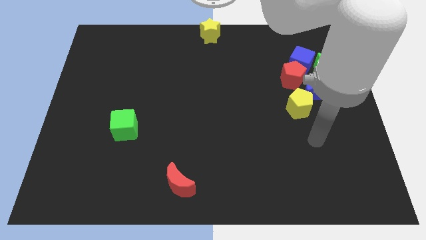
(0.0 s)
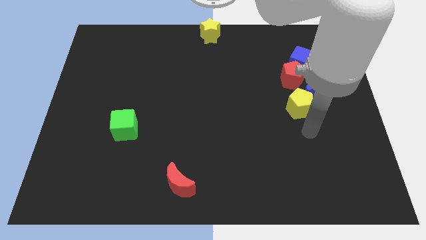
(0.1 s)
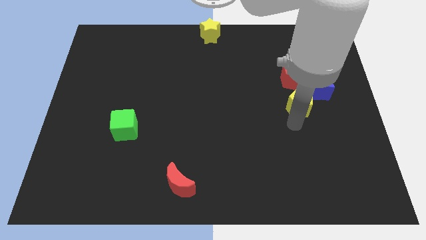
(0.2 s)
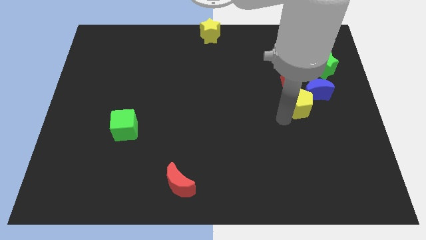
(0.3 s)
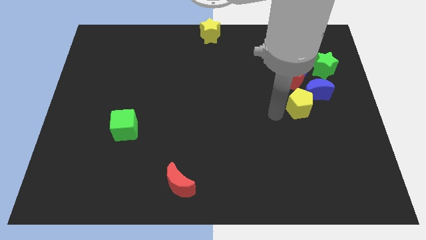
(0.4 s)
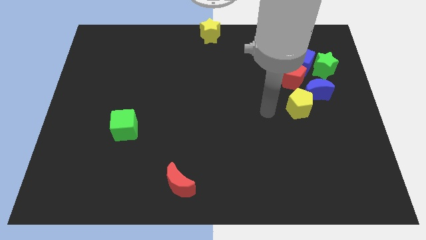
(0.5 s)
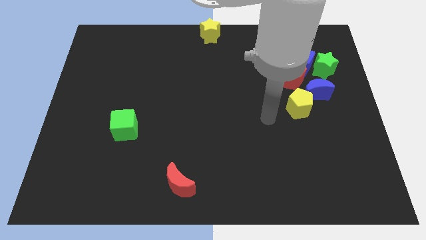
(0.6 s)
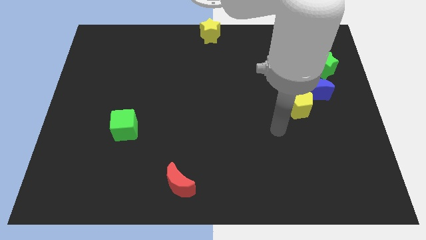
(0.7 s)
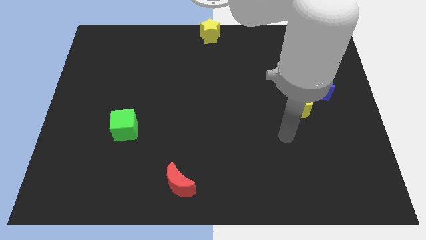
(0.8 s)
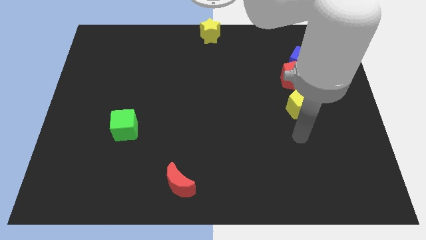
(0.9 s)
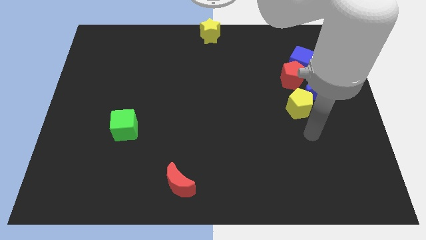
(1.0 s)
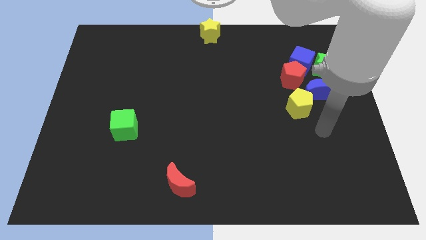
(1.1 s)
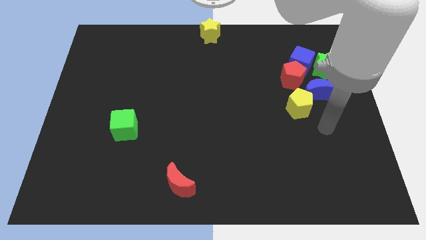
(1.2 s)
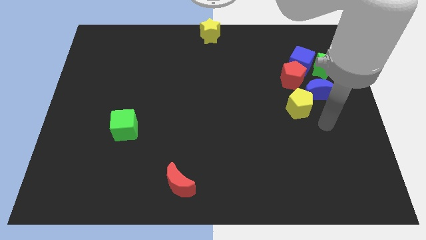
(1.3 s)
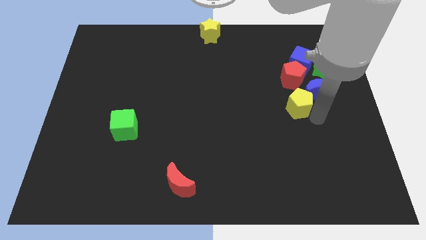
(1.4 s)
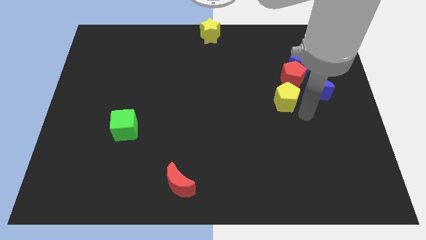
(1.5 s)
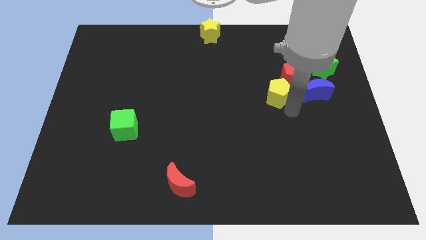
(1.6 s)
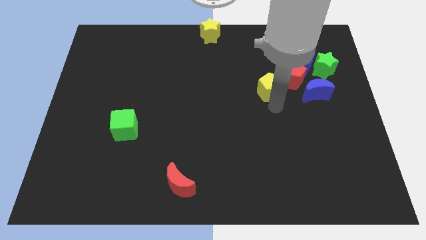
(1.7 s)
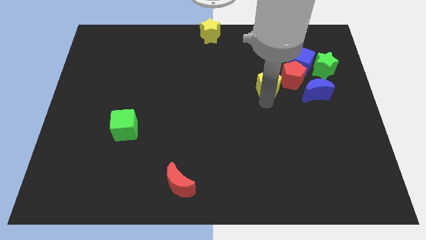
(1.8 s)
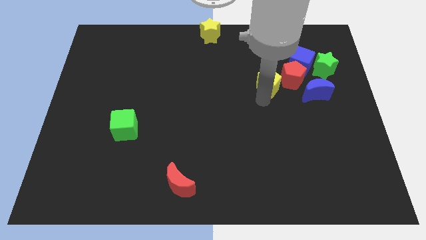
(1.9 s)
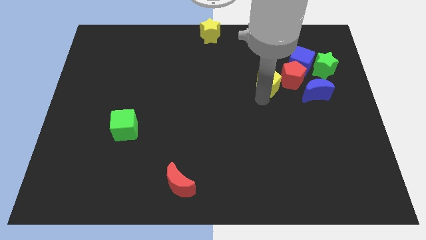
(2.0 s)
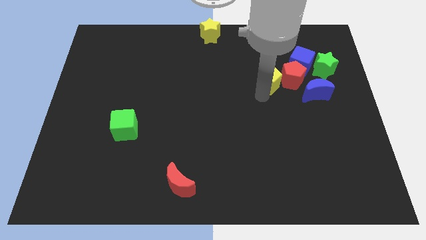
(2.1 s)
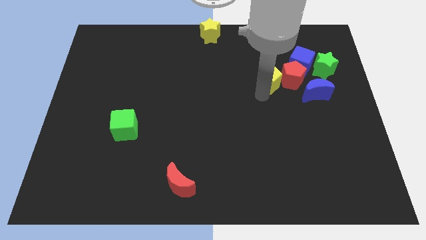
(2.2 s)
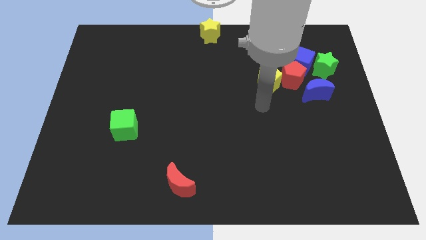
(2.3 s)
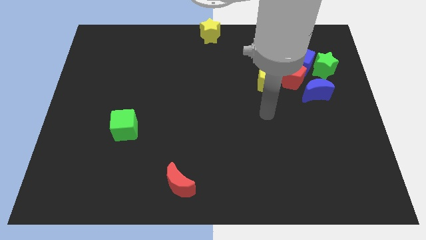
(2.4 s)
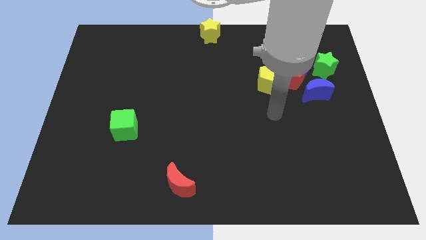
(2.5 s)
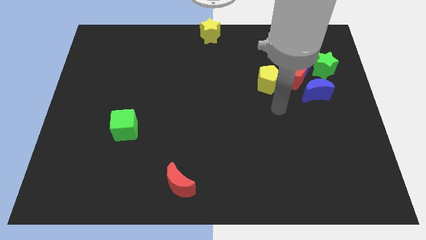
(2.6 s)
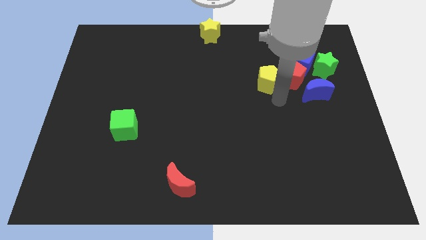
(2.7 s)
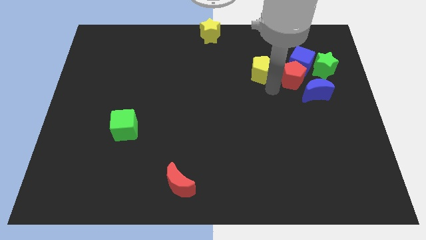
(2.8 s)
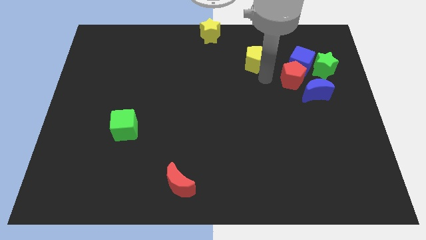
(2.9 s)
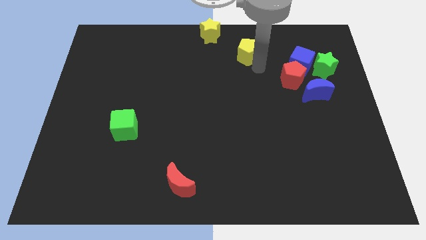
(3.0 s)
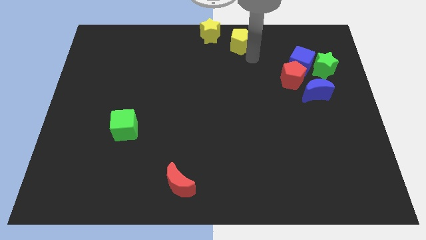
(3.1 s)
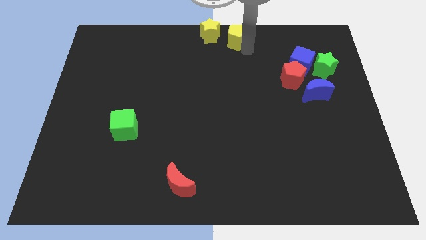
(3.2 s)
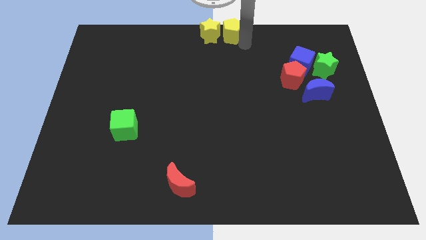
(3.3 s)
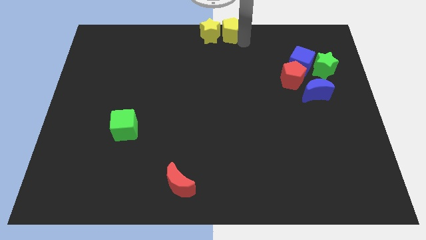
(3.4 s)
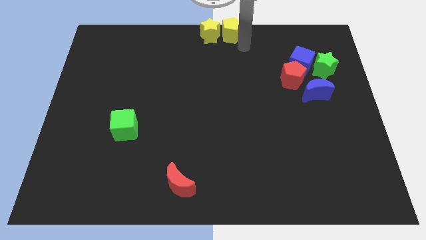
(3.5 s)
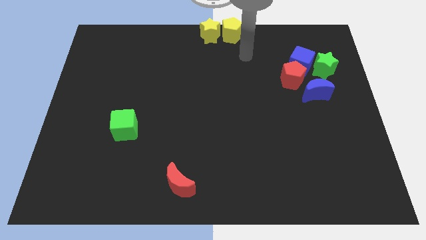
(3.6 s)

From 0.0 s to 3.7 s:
place the yellow pentagon to the right yellow star

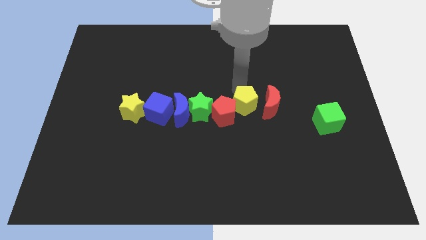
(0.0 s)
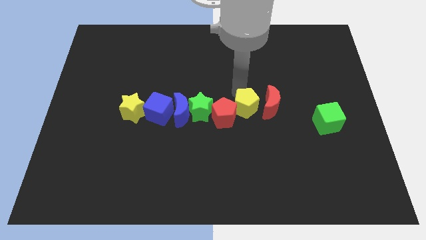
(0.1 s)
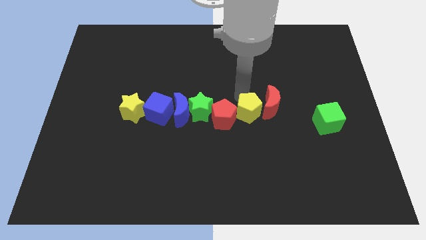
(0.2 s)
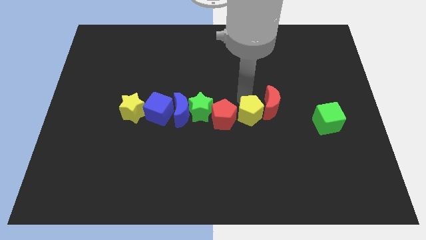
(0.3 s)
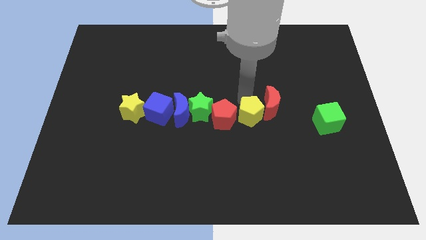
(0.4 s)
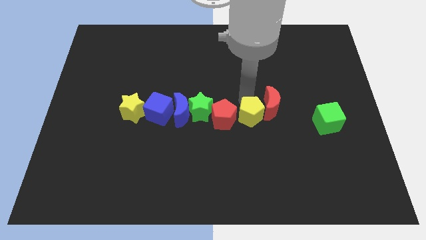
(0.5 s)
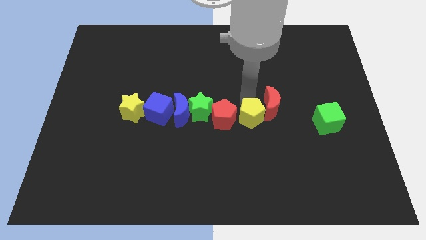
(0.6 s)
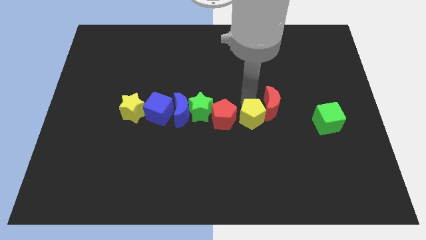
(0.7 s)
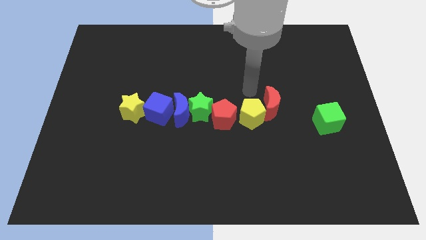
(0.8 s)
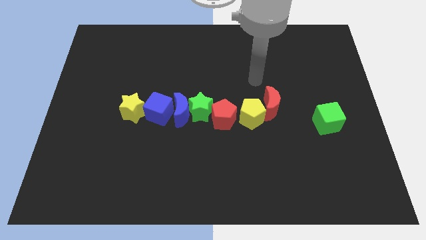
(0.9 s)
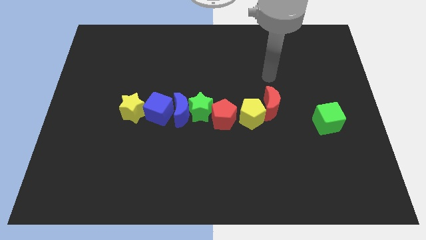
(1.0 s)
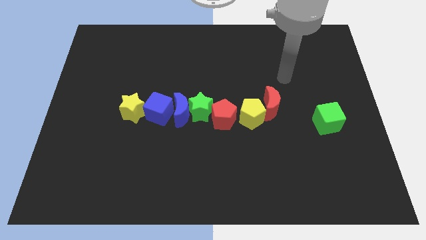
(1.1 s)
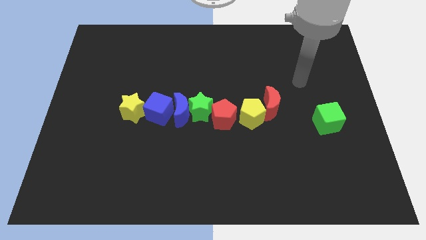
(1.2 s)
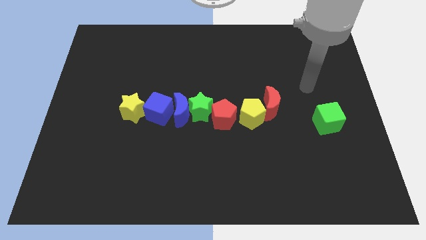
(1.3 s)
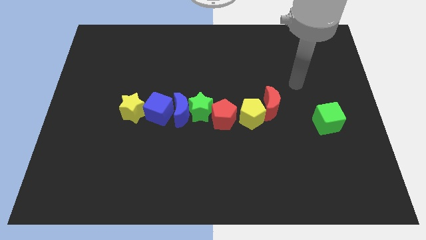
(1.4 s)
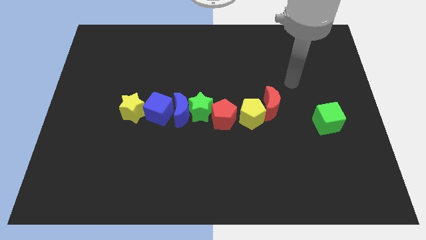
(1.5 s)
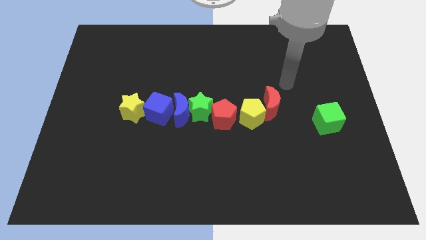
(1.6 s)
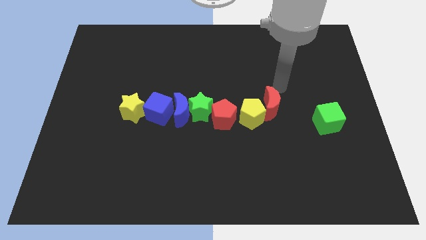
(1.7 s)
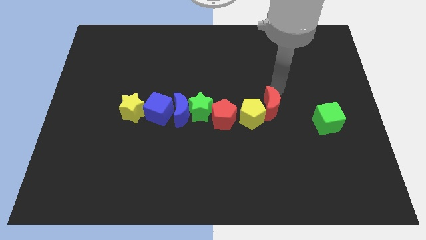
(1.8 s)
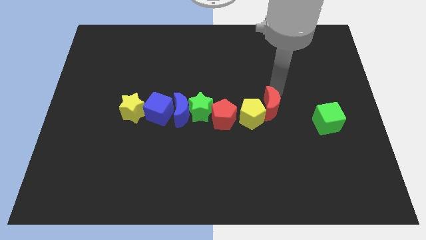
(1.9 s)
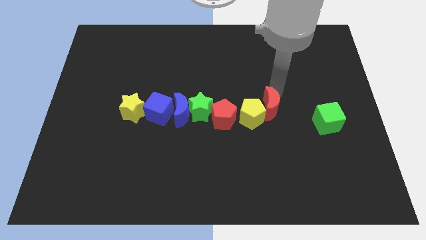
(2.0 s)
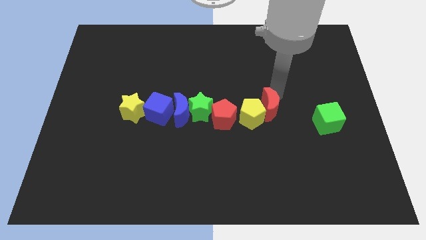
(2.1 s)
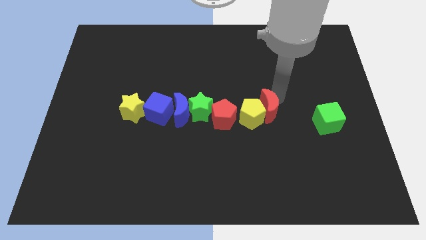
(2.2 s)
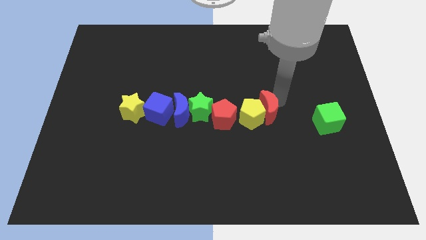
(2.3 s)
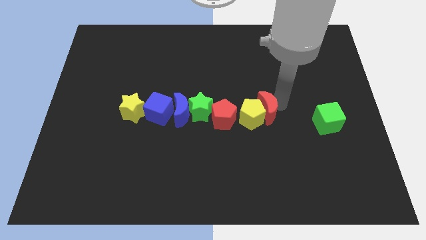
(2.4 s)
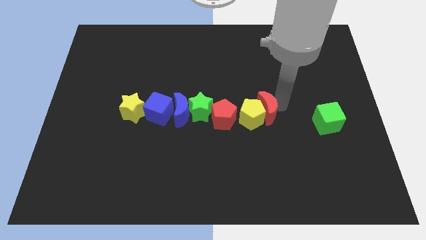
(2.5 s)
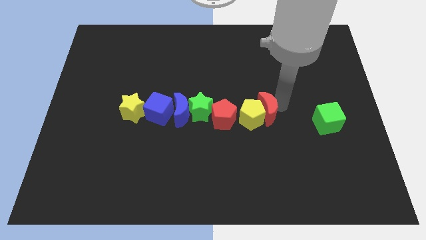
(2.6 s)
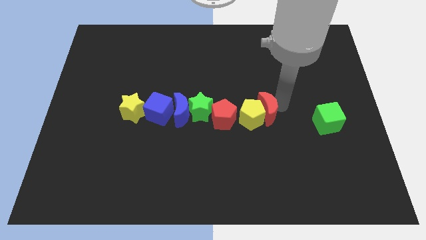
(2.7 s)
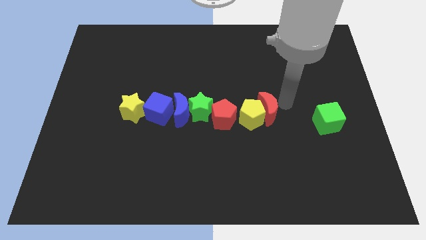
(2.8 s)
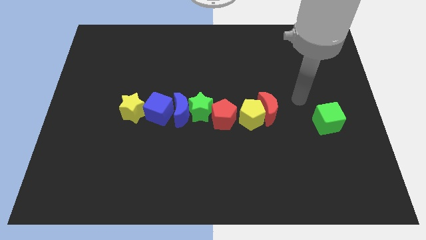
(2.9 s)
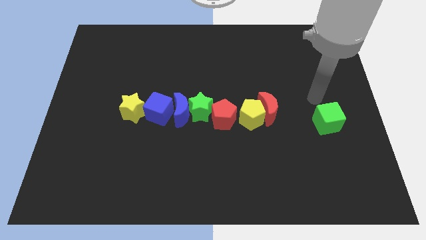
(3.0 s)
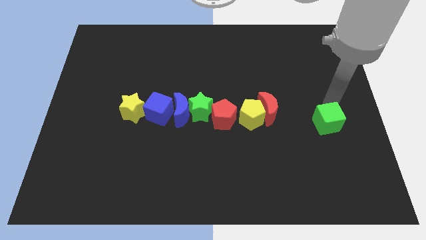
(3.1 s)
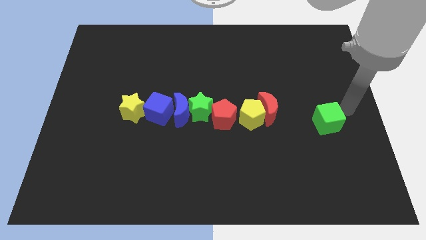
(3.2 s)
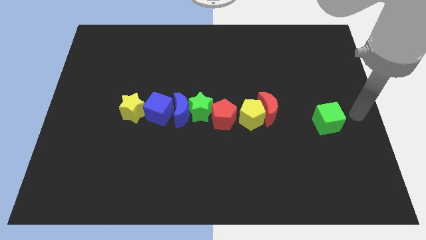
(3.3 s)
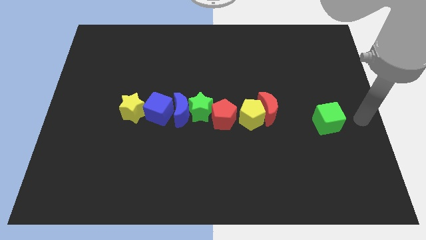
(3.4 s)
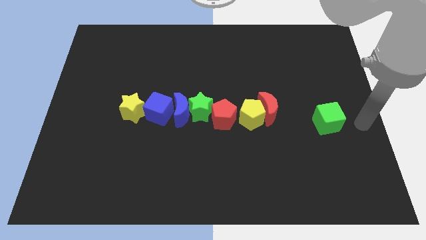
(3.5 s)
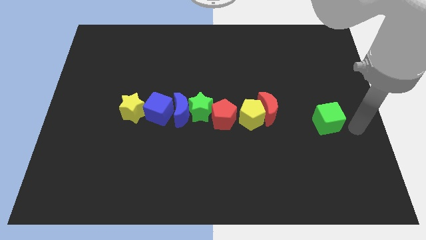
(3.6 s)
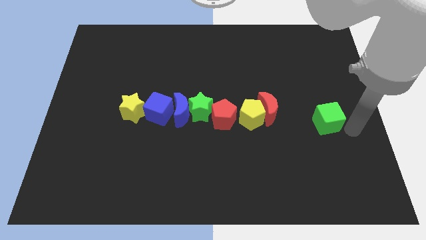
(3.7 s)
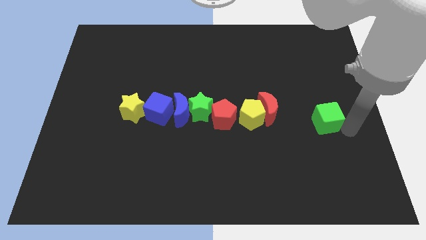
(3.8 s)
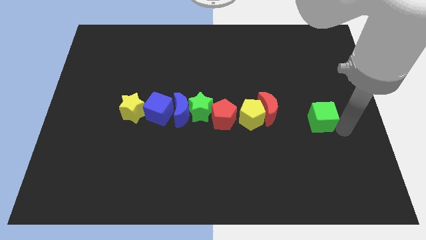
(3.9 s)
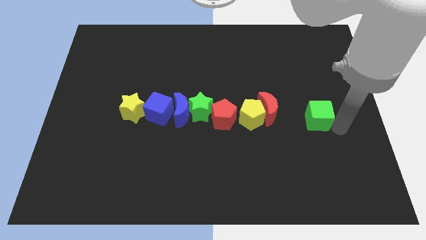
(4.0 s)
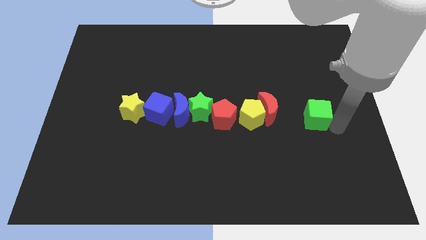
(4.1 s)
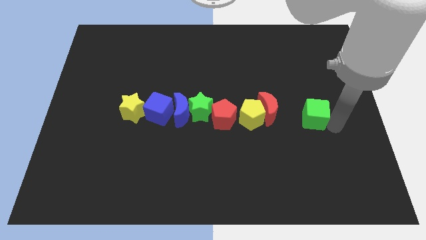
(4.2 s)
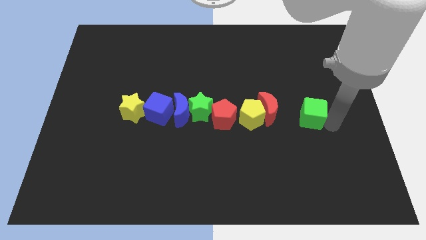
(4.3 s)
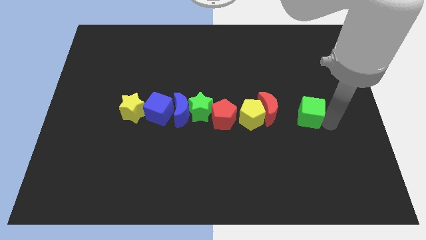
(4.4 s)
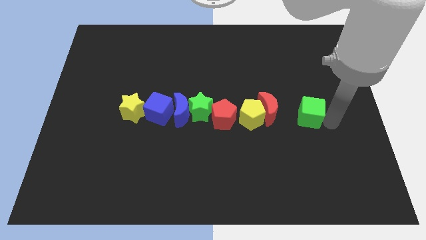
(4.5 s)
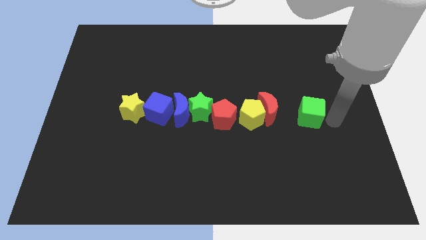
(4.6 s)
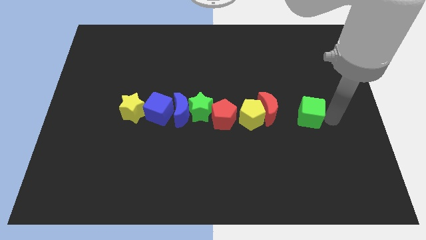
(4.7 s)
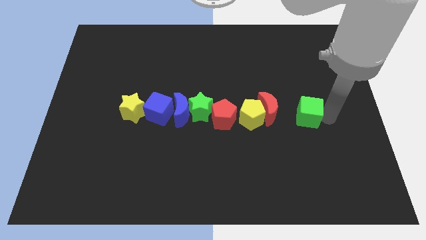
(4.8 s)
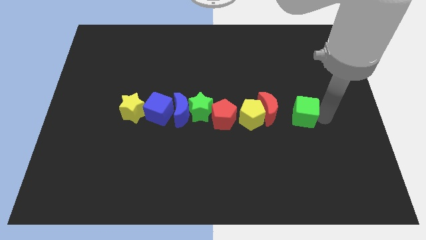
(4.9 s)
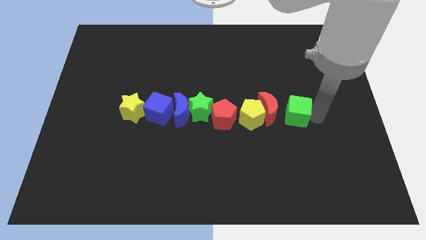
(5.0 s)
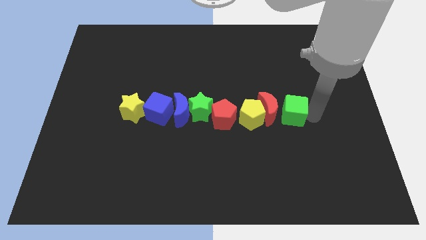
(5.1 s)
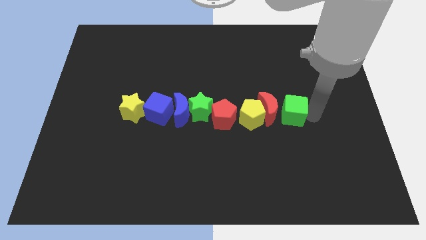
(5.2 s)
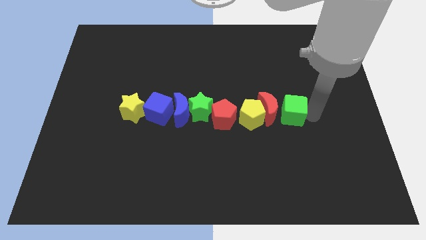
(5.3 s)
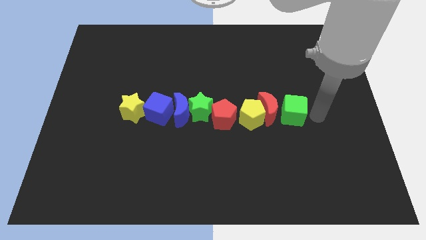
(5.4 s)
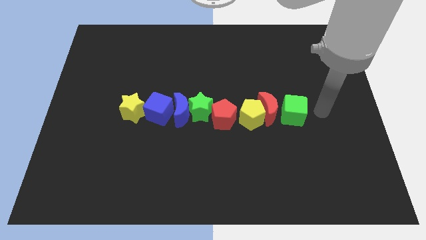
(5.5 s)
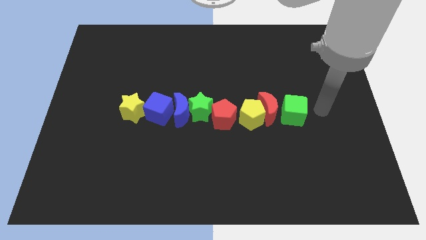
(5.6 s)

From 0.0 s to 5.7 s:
put all the blocks in a horizontal line
